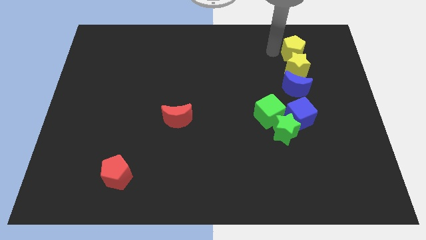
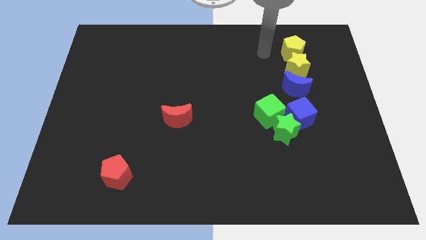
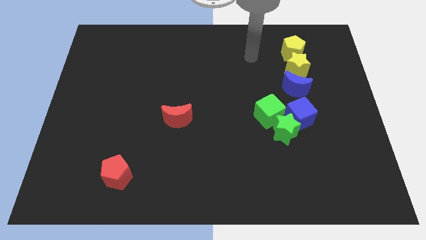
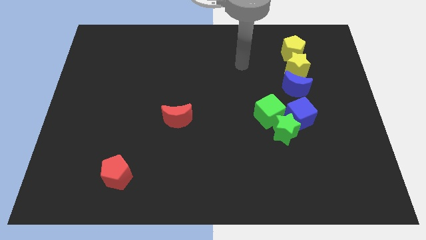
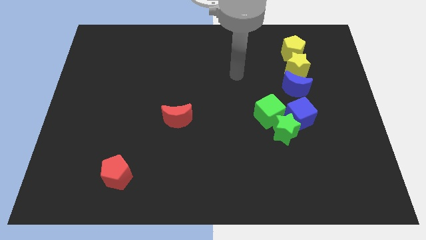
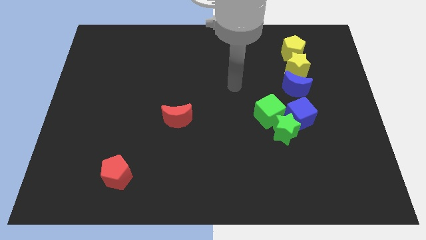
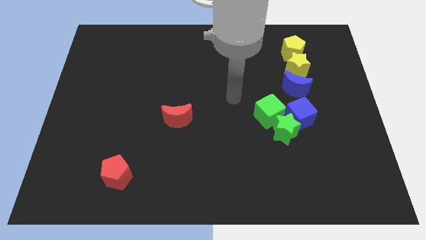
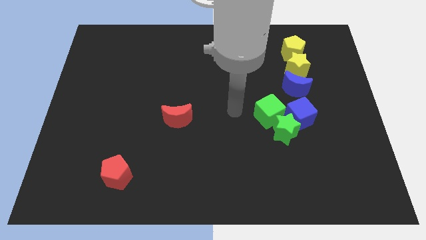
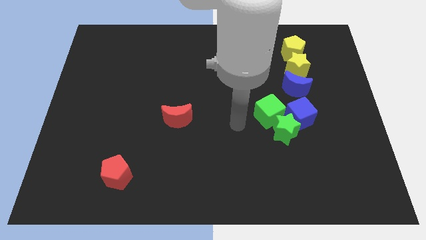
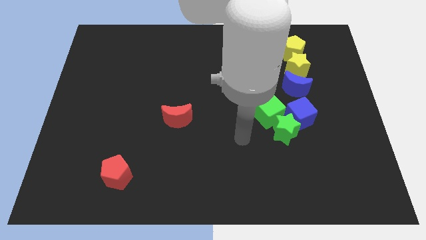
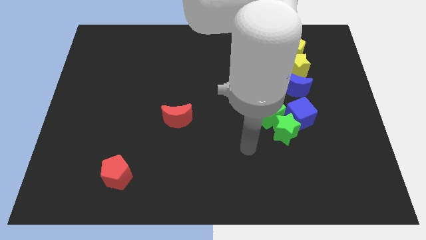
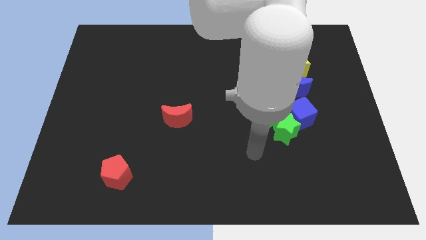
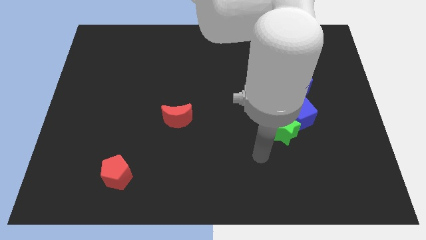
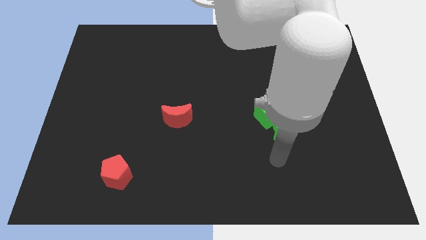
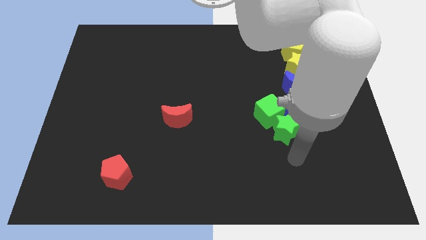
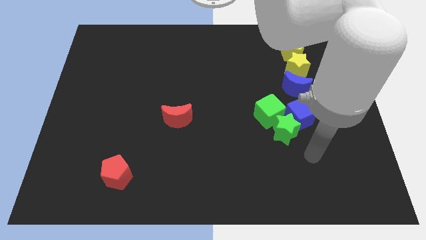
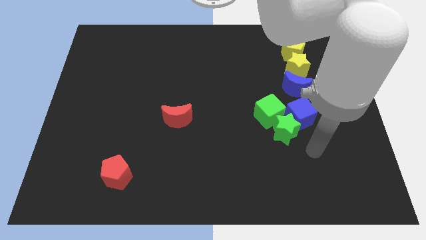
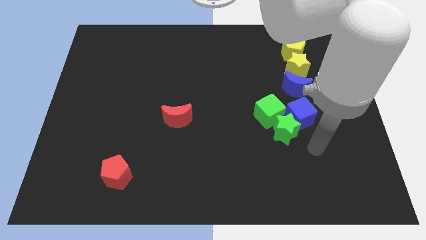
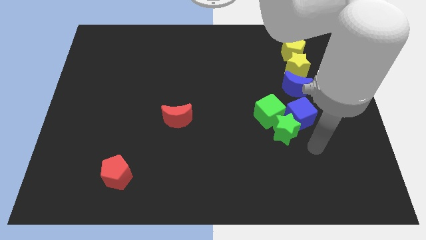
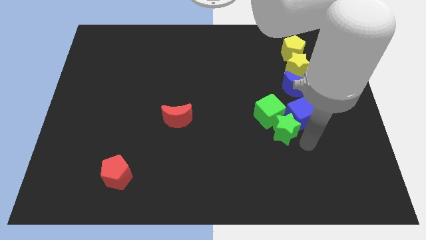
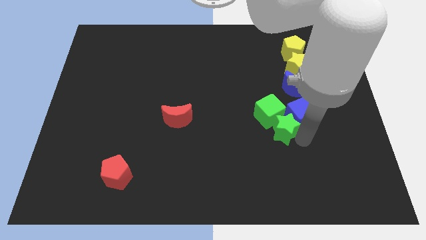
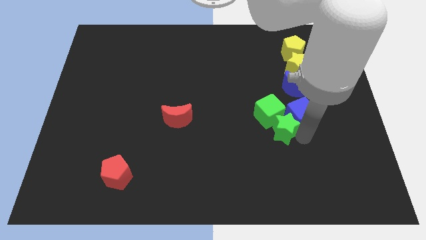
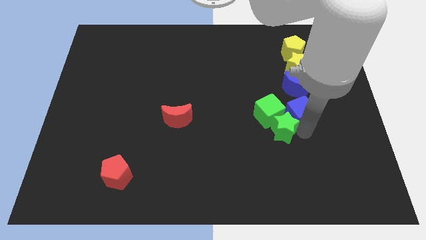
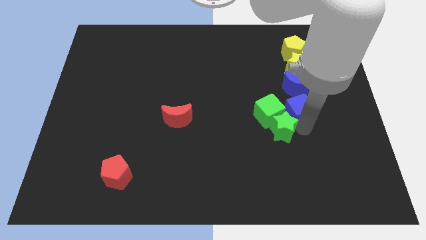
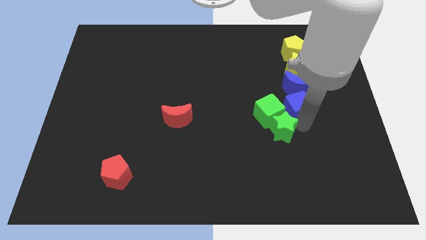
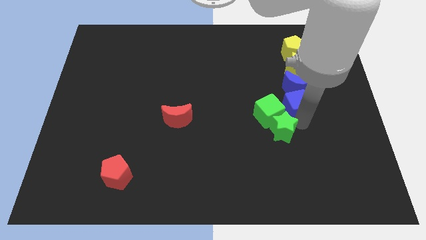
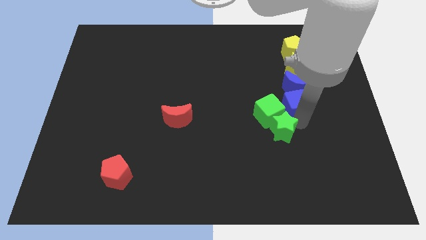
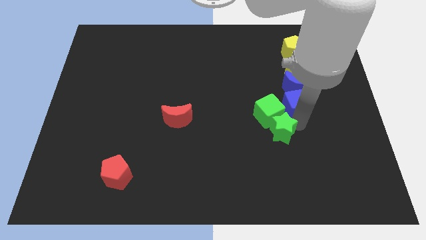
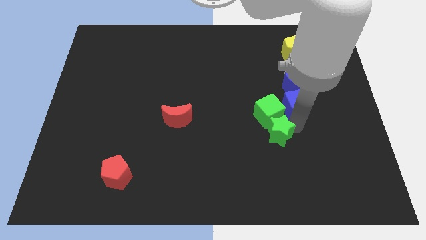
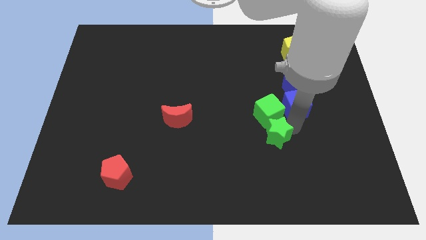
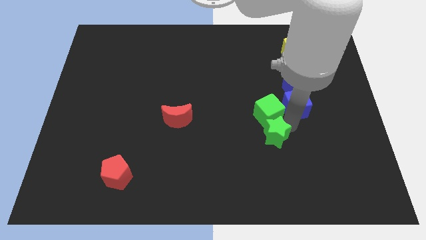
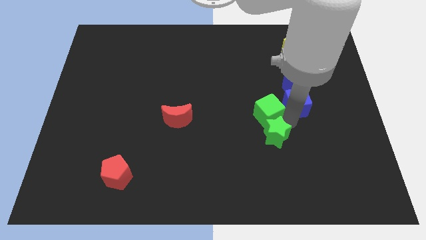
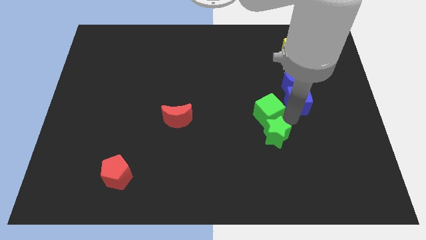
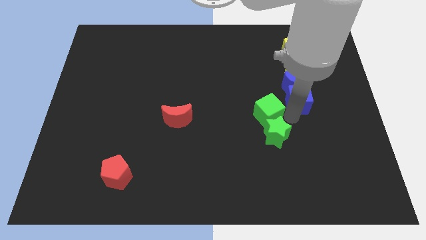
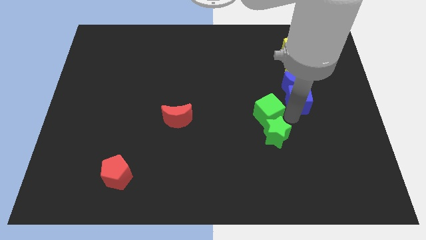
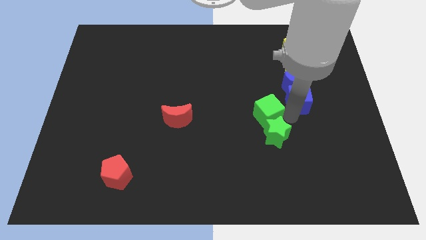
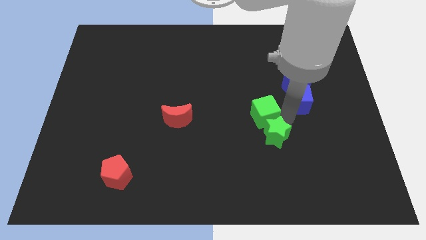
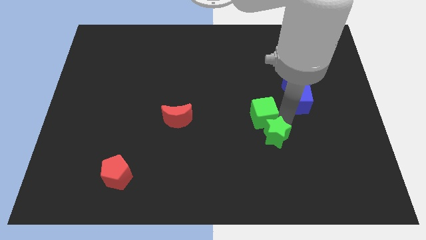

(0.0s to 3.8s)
push the blue cube into blue moon

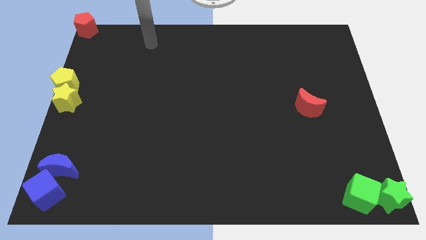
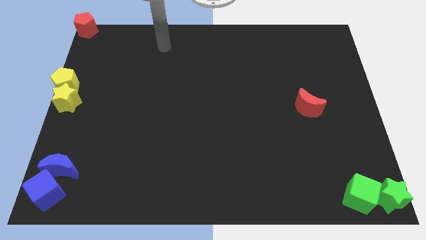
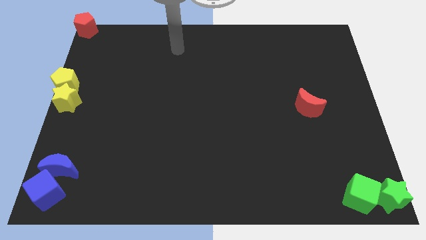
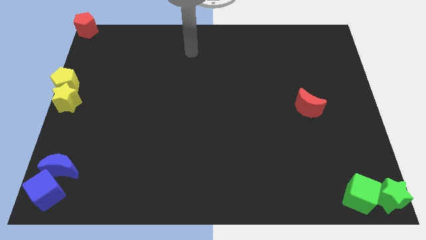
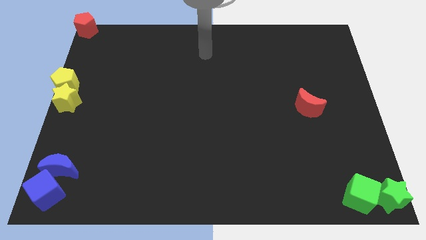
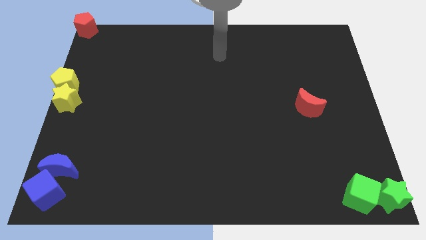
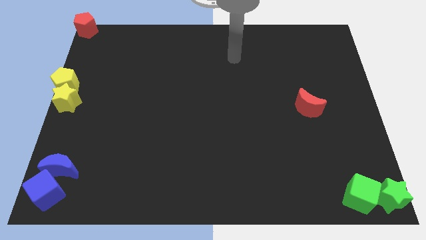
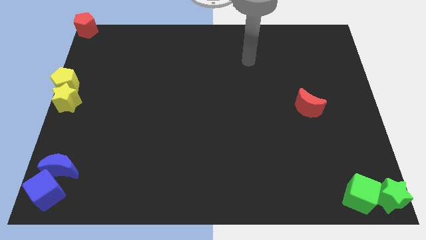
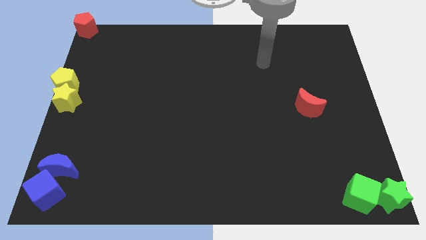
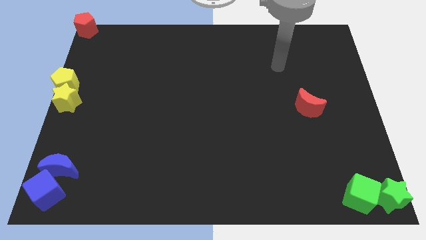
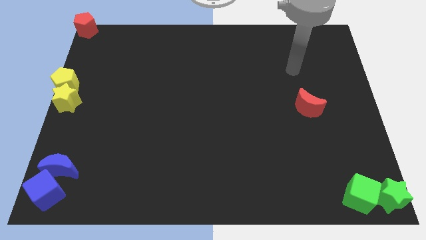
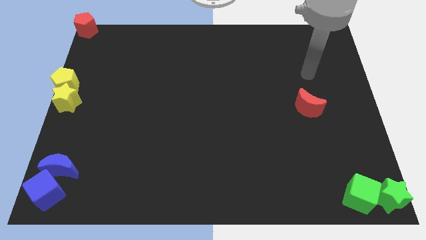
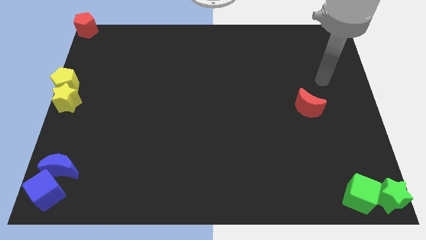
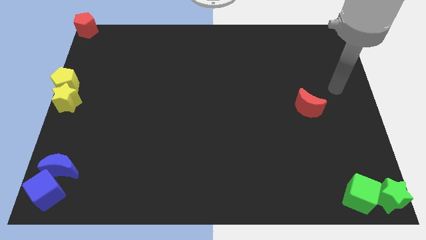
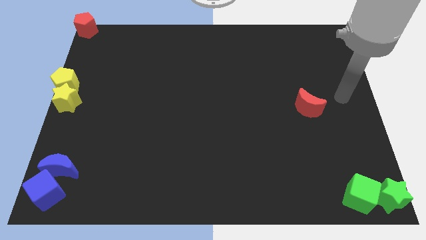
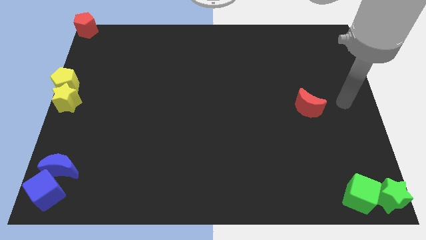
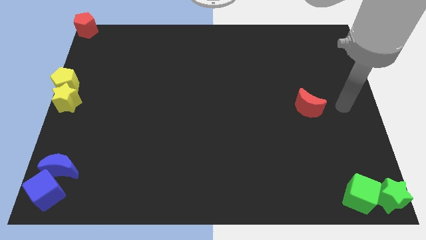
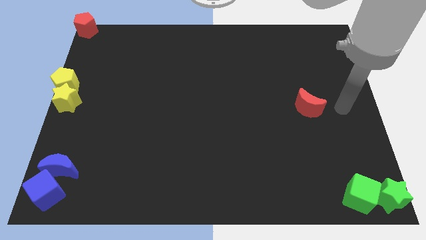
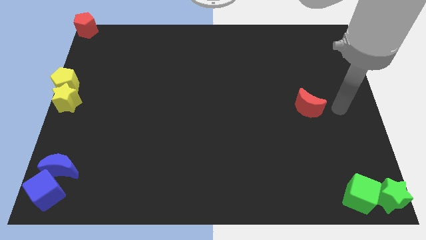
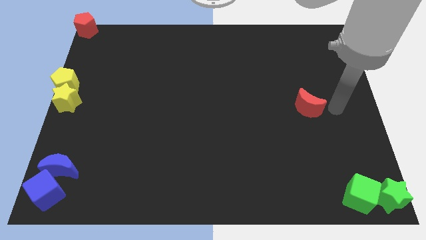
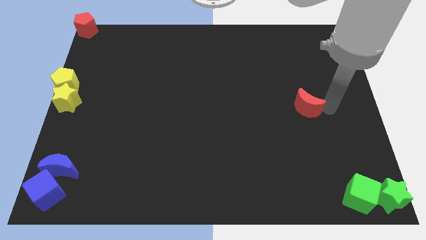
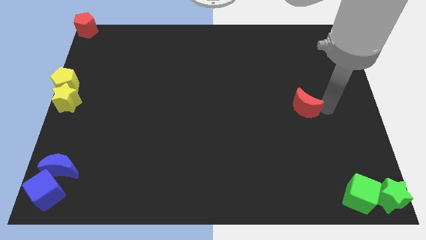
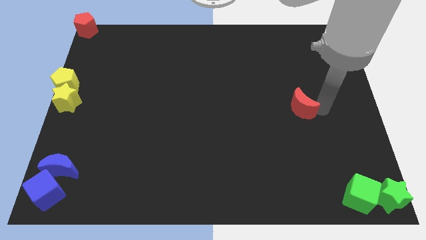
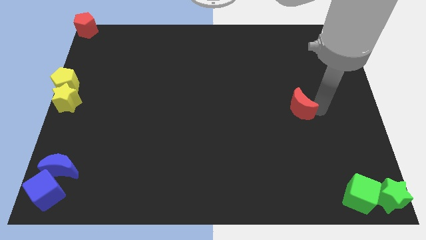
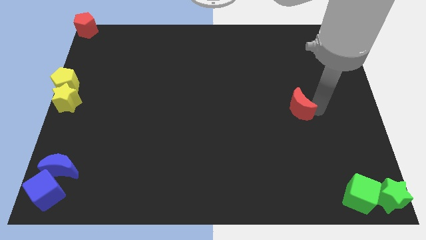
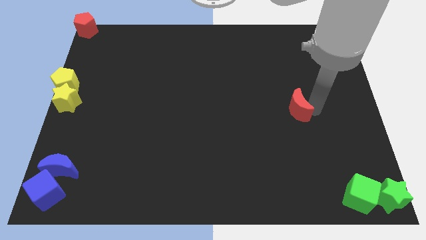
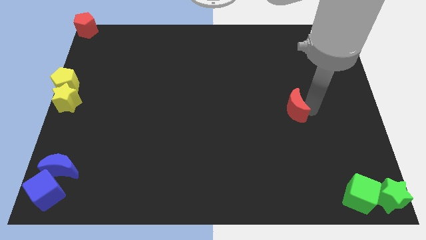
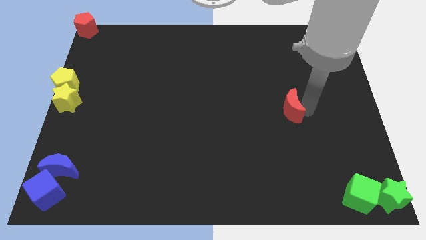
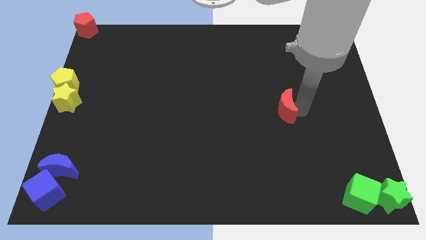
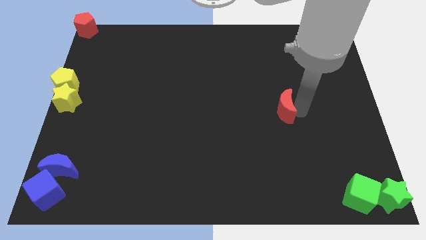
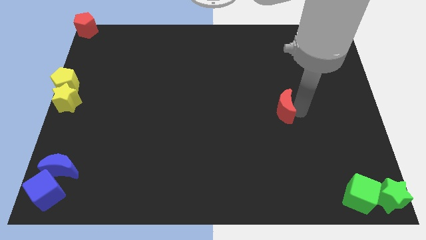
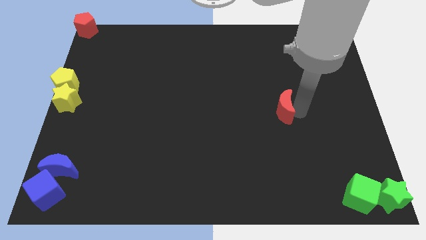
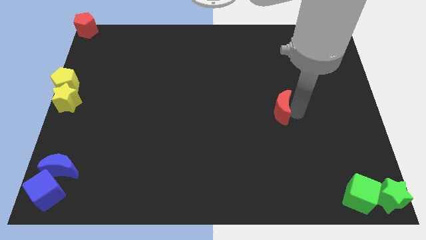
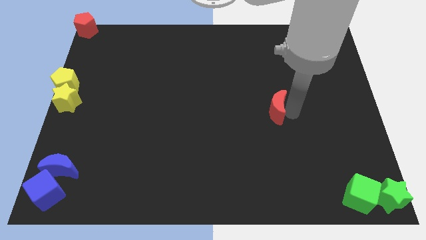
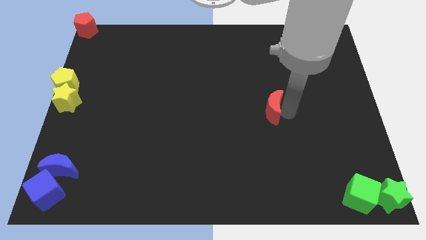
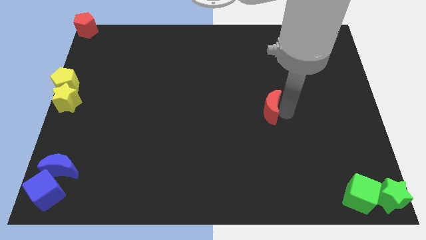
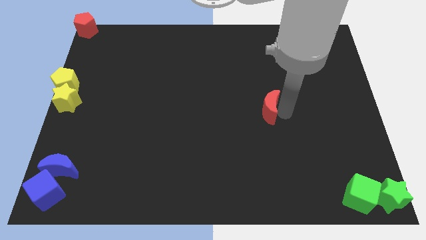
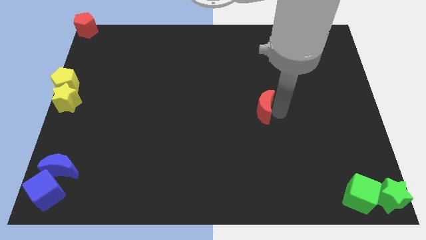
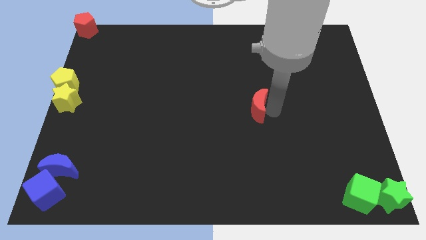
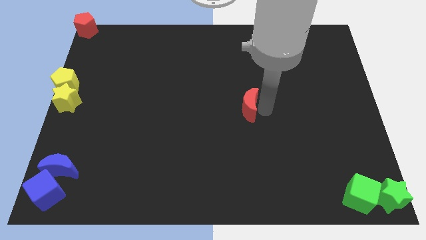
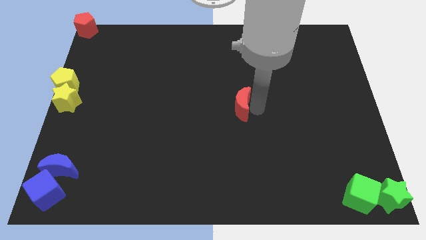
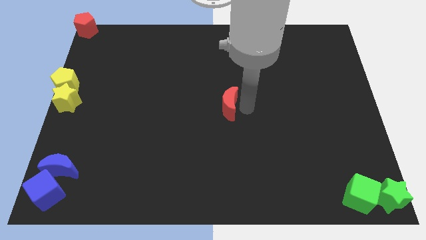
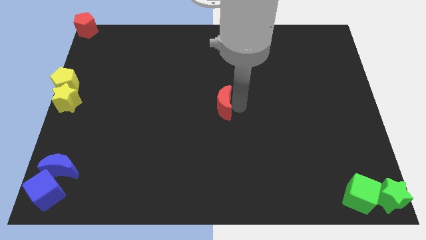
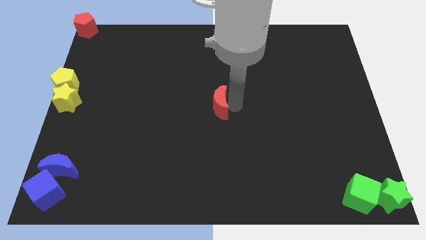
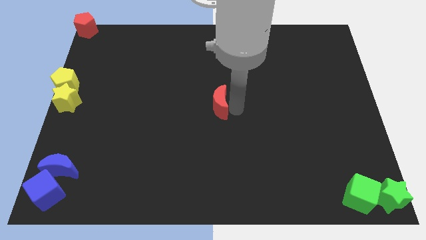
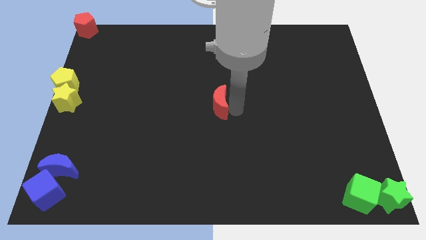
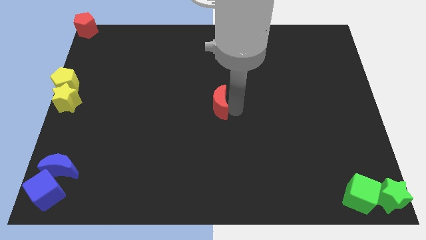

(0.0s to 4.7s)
place the red crescent at the center of the board

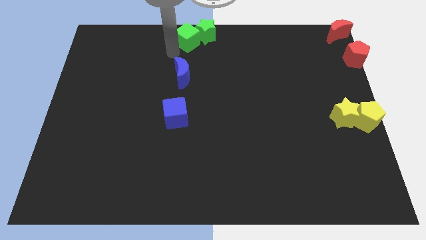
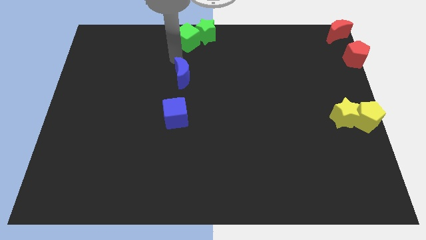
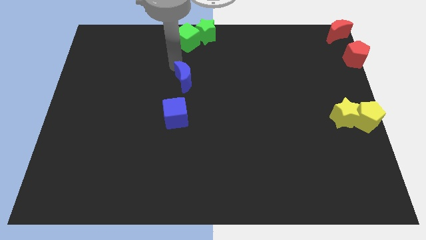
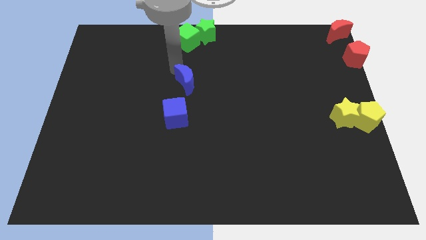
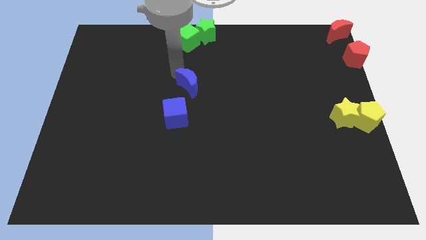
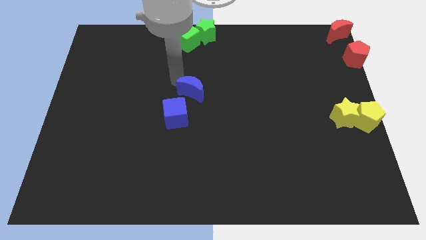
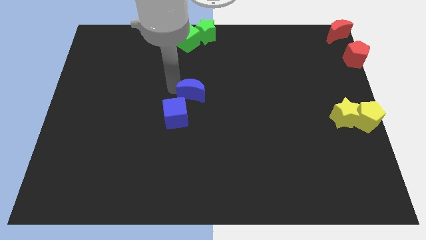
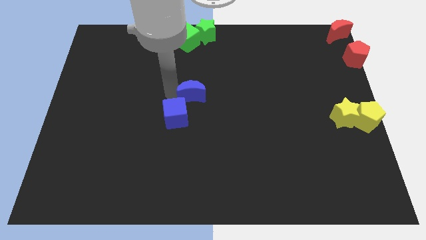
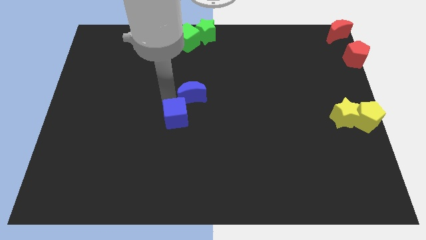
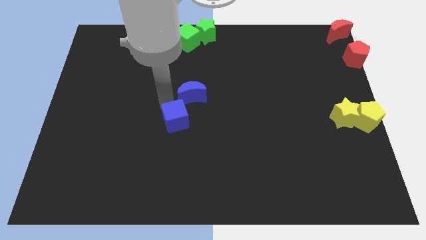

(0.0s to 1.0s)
push the blue crescent close to the blue cube
